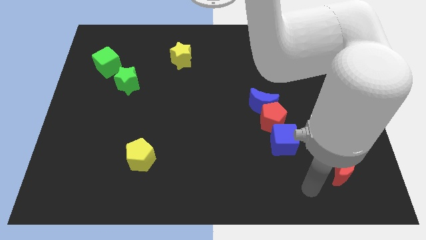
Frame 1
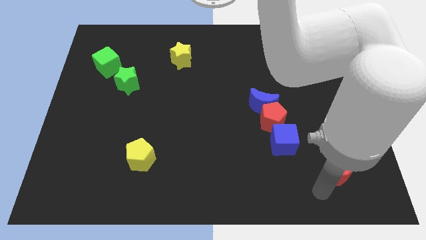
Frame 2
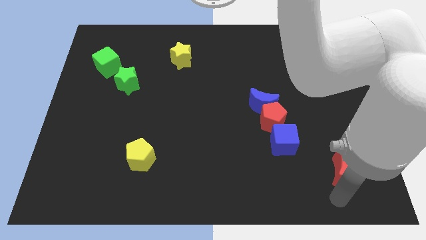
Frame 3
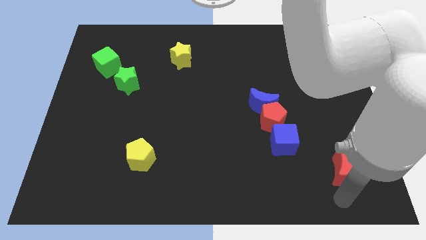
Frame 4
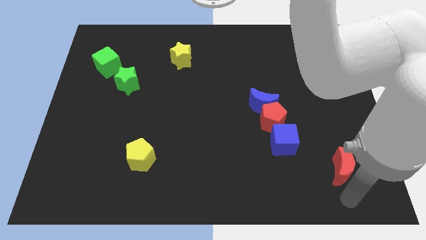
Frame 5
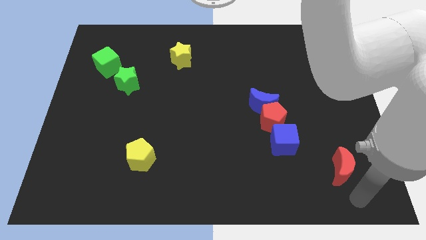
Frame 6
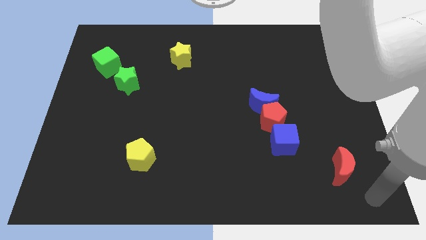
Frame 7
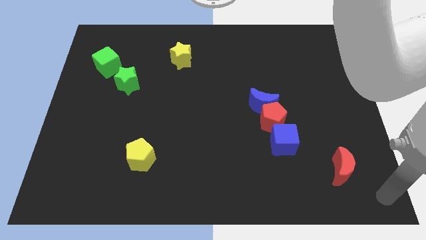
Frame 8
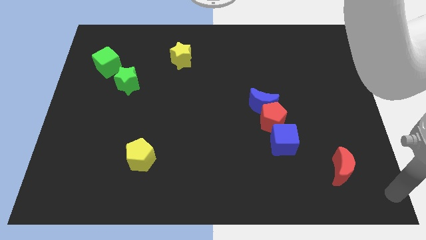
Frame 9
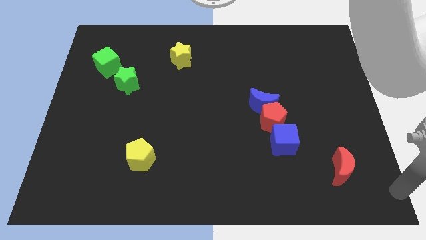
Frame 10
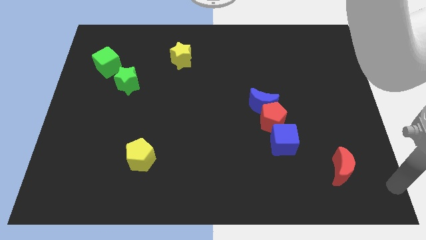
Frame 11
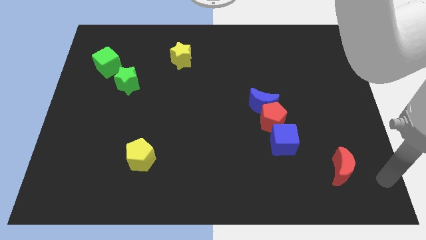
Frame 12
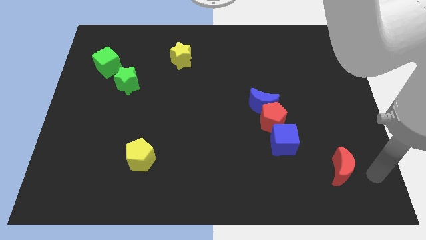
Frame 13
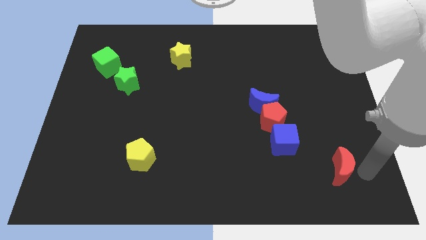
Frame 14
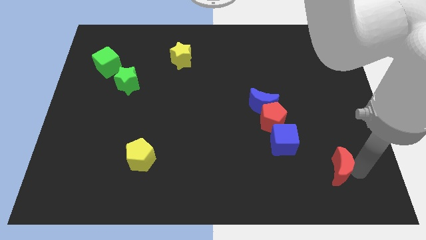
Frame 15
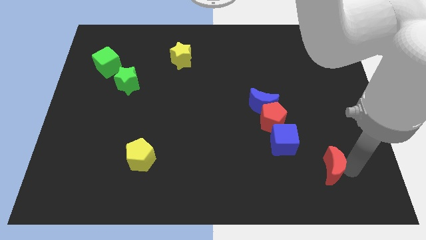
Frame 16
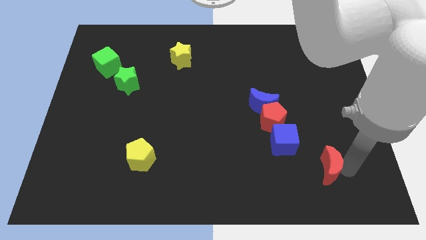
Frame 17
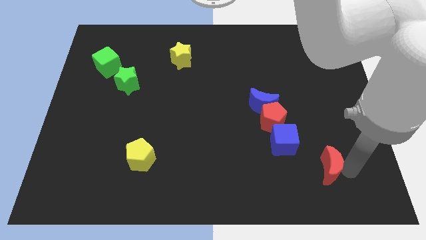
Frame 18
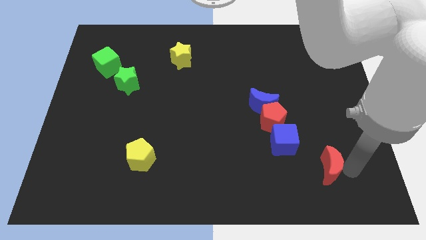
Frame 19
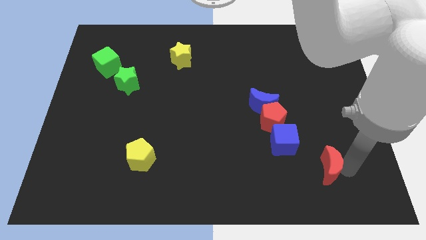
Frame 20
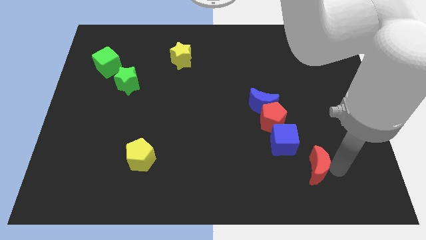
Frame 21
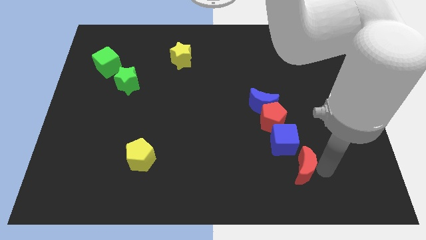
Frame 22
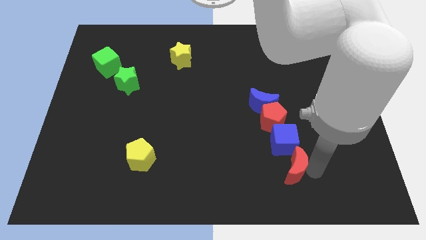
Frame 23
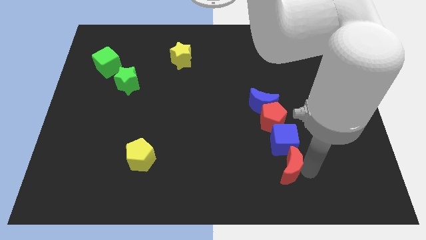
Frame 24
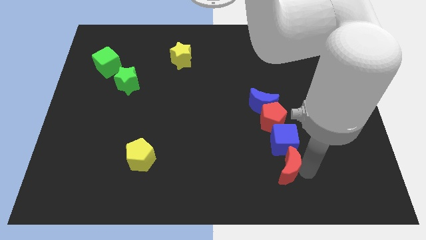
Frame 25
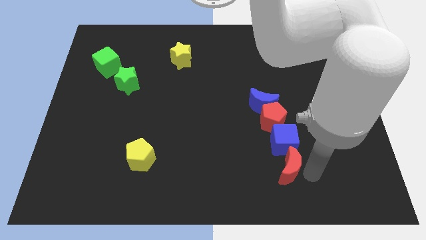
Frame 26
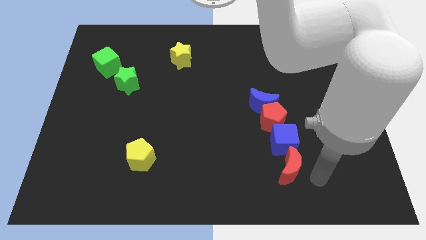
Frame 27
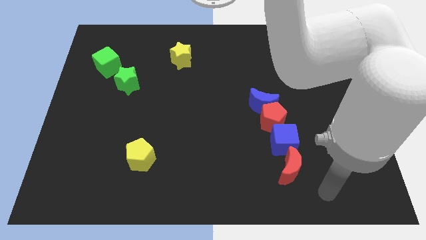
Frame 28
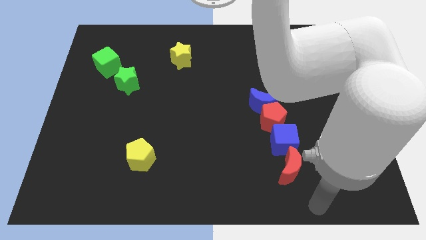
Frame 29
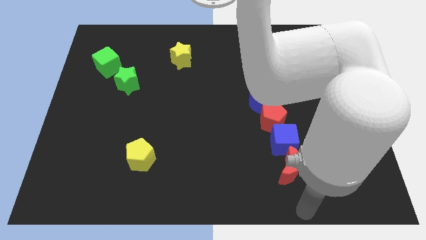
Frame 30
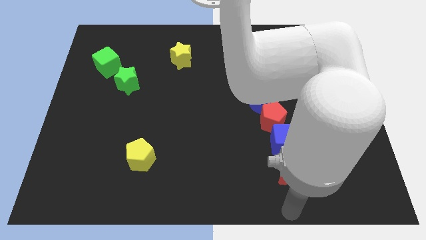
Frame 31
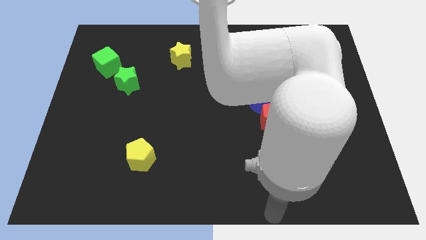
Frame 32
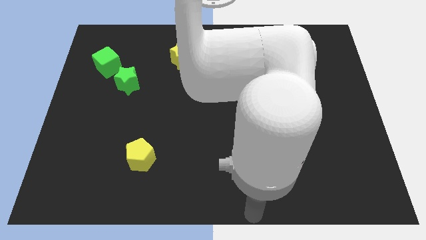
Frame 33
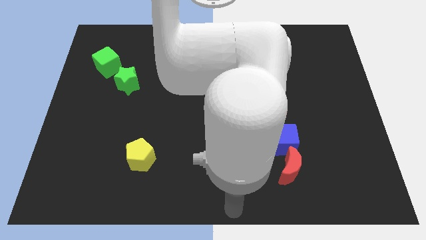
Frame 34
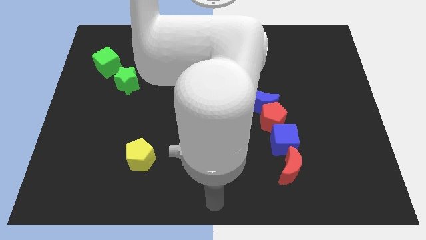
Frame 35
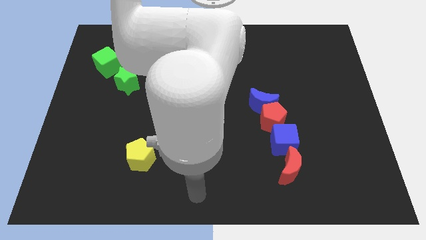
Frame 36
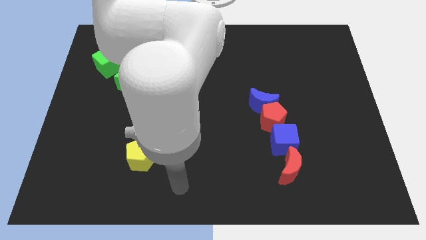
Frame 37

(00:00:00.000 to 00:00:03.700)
place the red crescent below the blue cube

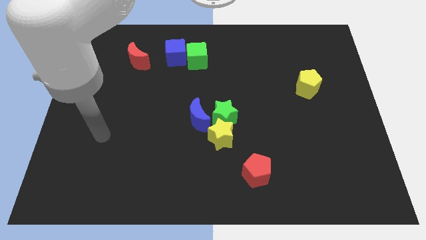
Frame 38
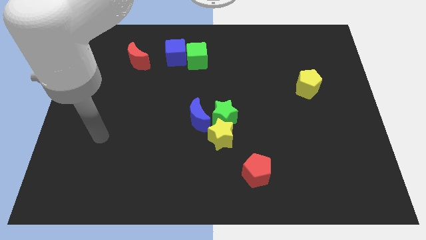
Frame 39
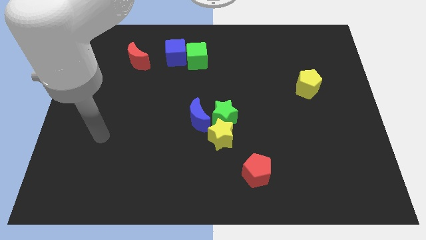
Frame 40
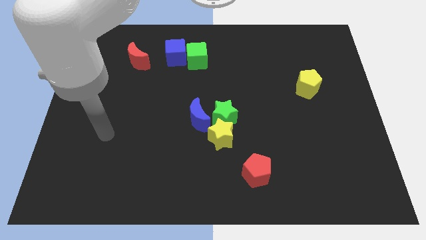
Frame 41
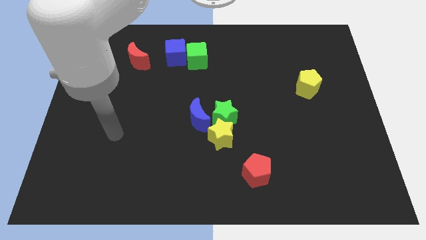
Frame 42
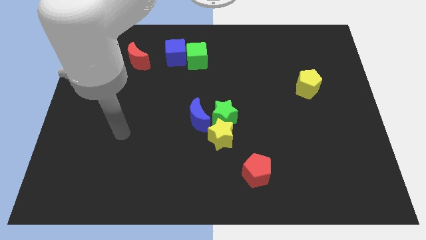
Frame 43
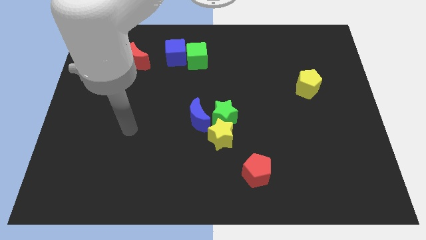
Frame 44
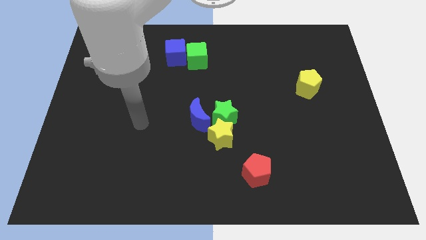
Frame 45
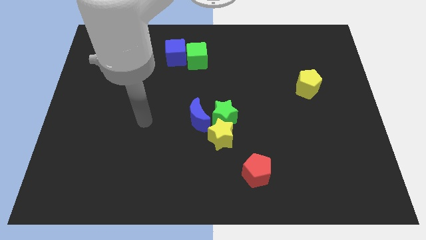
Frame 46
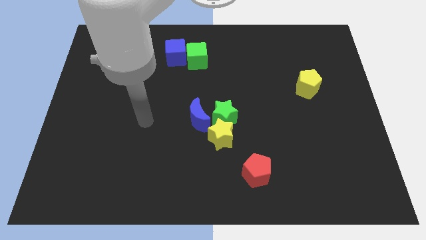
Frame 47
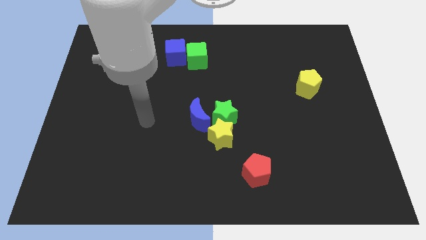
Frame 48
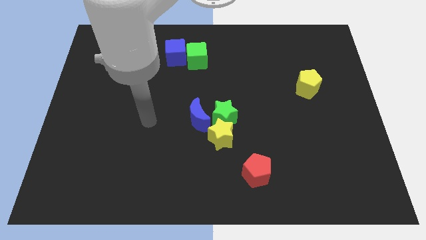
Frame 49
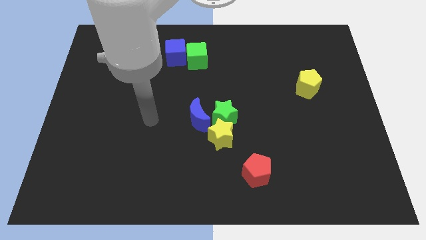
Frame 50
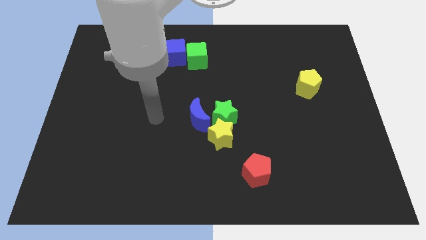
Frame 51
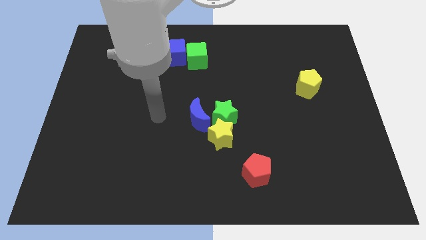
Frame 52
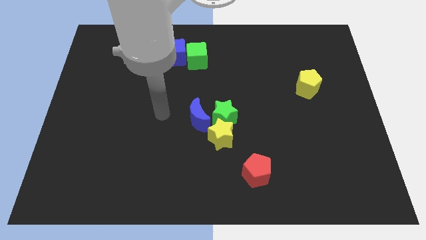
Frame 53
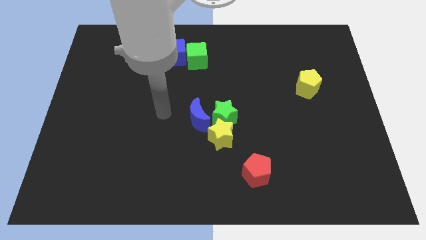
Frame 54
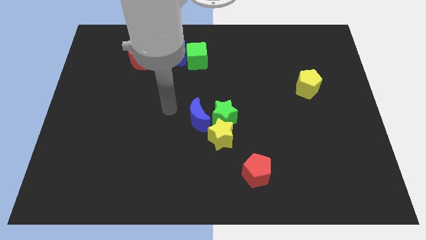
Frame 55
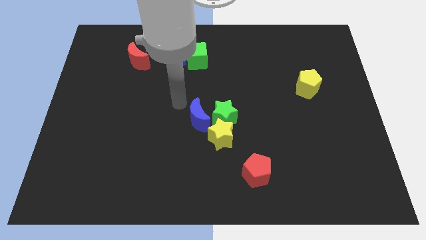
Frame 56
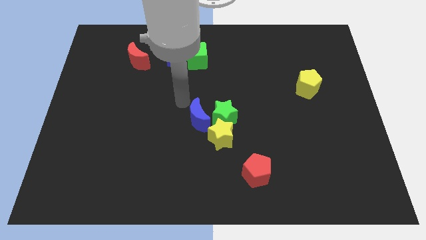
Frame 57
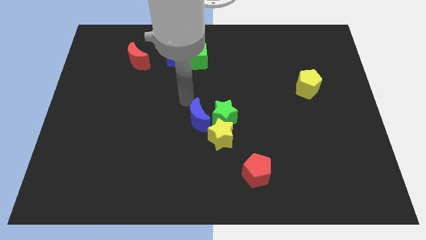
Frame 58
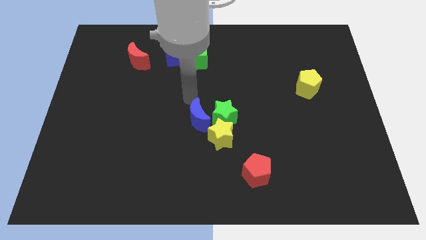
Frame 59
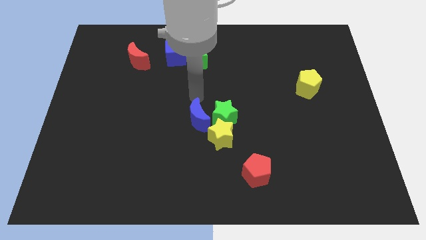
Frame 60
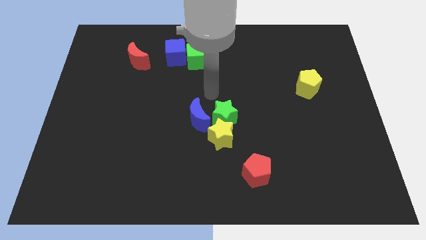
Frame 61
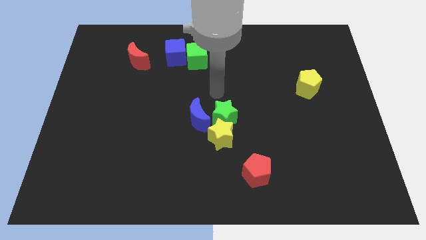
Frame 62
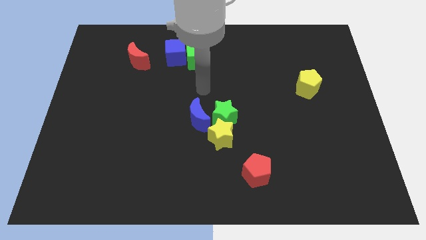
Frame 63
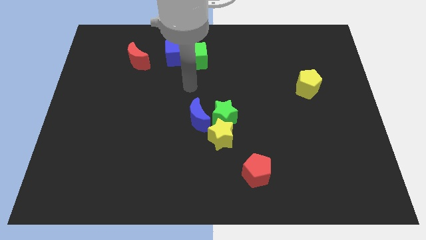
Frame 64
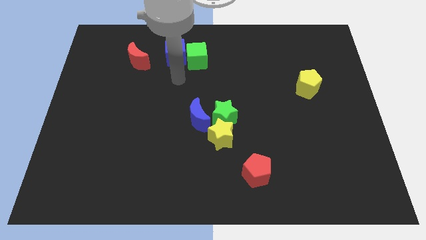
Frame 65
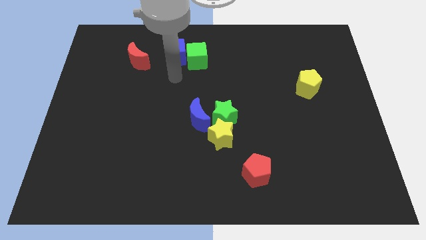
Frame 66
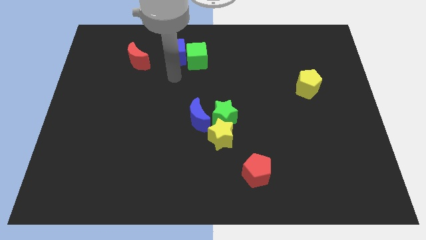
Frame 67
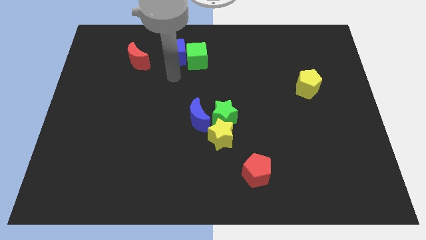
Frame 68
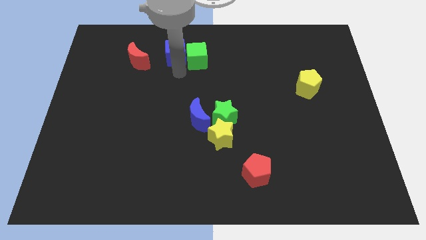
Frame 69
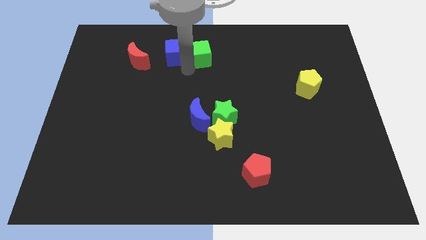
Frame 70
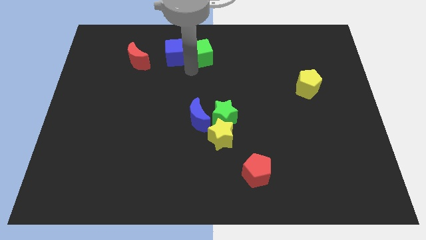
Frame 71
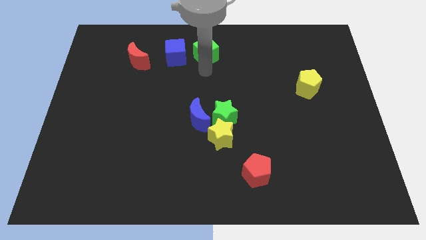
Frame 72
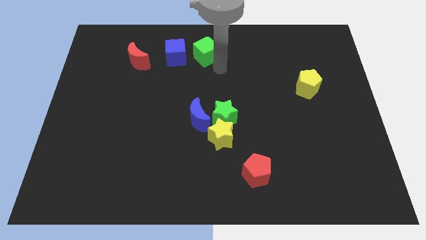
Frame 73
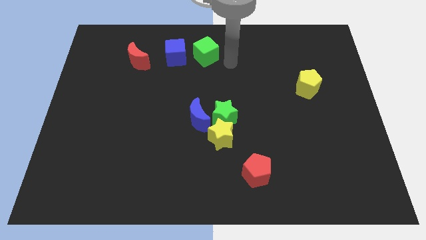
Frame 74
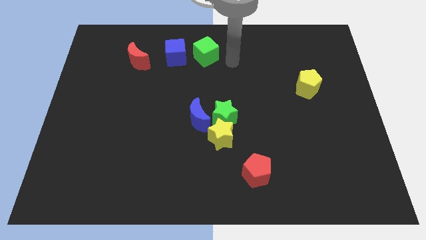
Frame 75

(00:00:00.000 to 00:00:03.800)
place the green cube adjacent to the blue cube

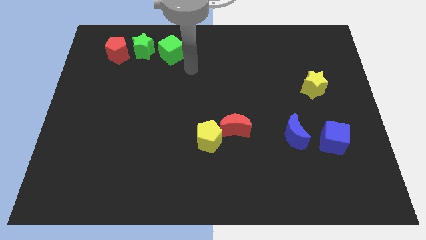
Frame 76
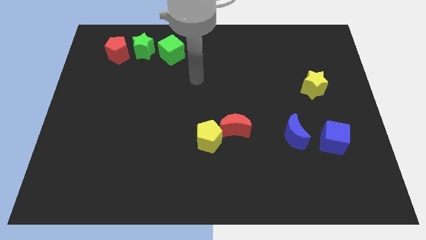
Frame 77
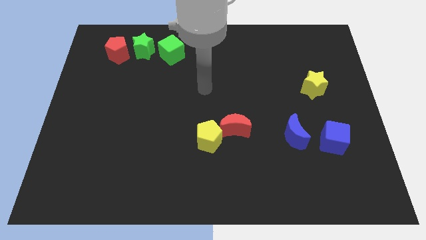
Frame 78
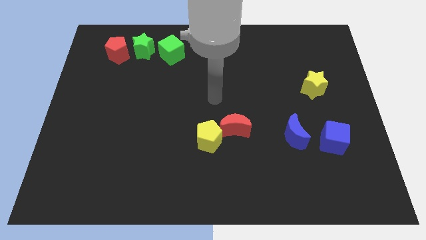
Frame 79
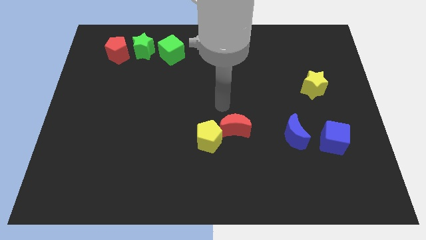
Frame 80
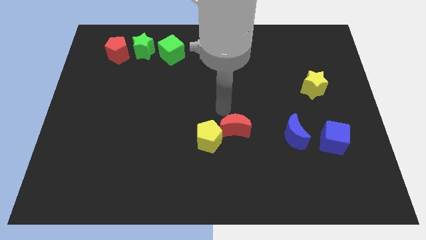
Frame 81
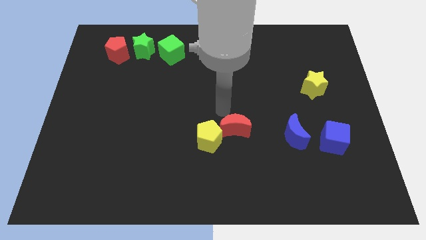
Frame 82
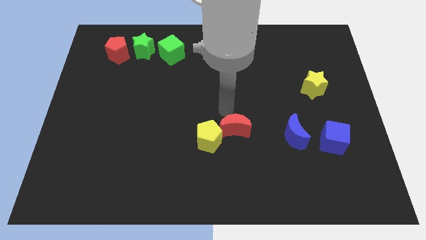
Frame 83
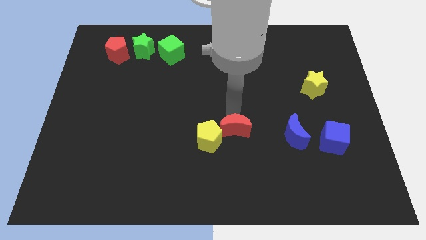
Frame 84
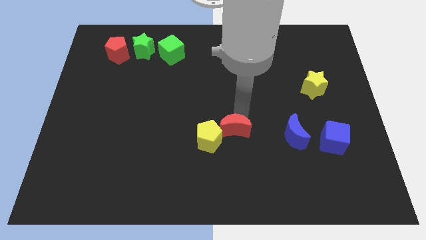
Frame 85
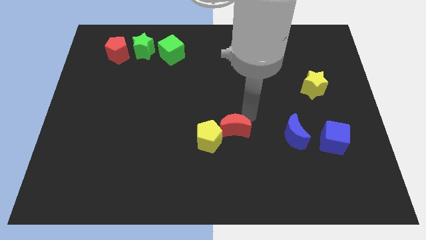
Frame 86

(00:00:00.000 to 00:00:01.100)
go away from the green cube

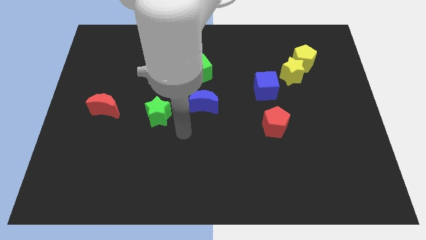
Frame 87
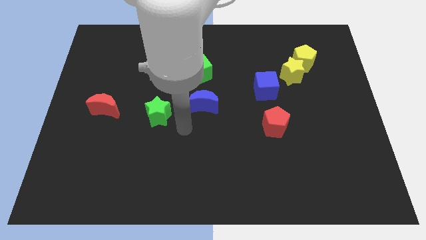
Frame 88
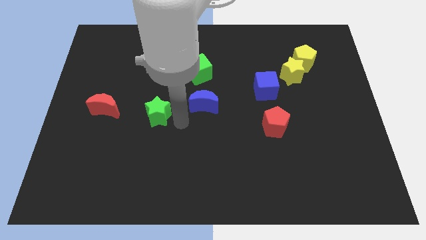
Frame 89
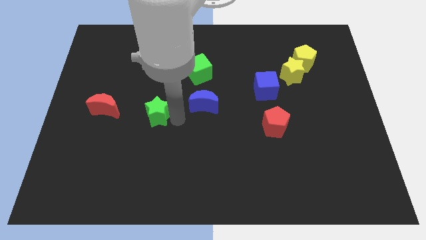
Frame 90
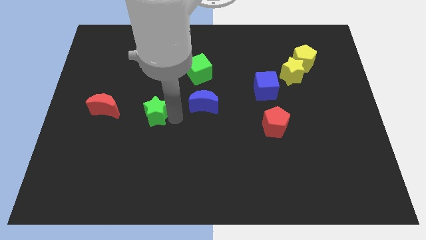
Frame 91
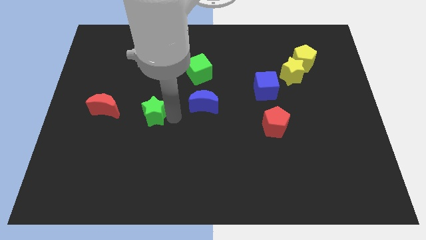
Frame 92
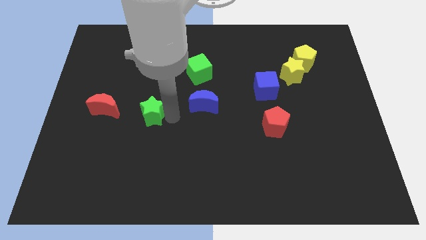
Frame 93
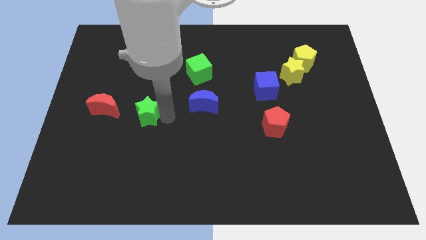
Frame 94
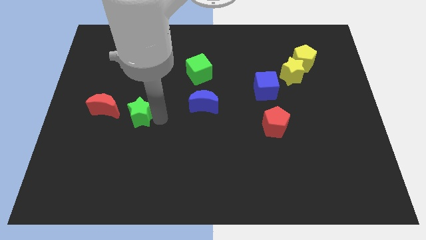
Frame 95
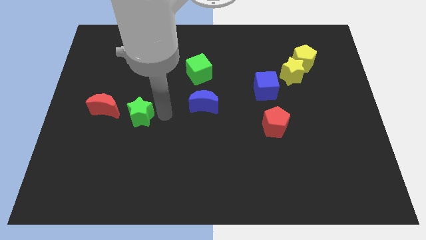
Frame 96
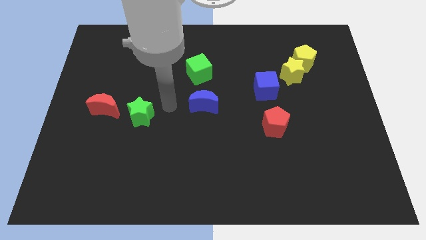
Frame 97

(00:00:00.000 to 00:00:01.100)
push green star towards red moon
